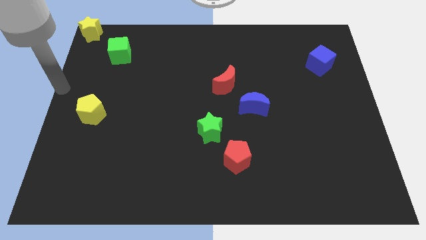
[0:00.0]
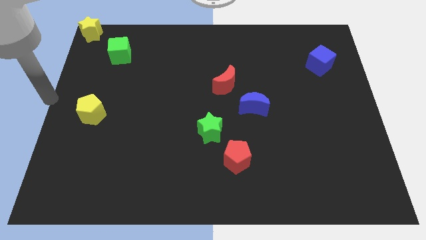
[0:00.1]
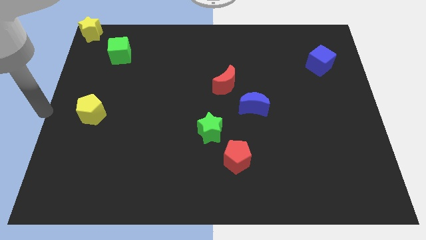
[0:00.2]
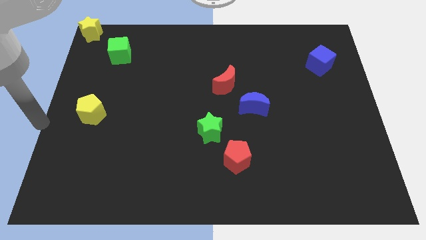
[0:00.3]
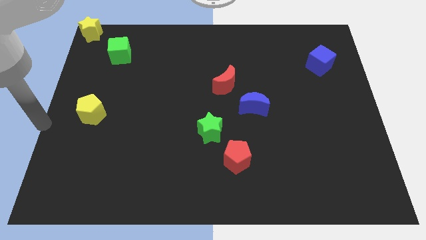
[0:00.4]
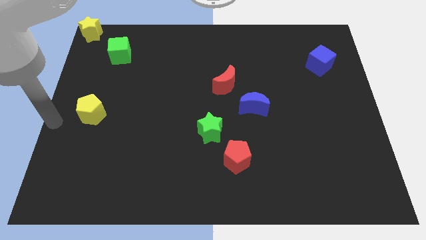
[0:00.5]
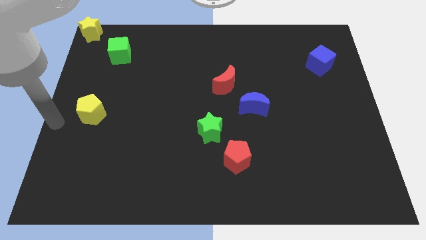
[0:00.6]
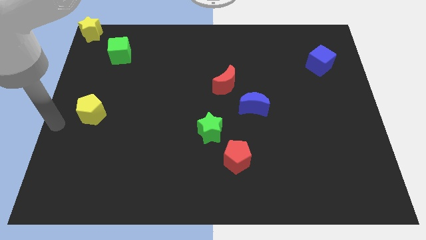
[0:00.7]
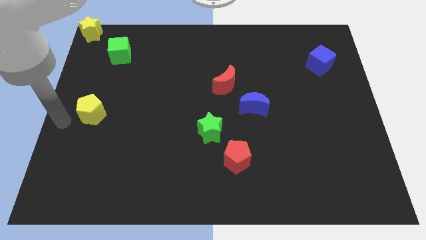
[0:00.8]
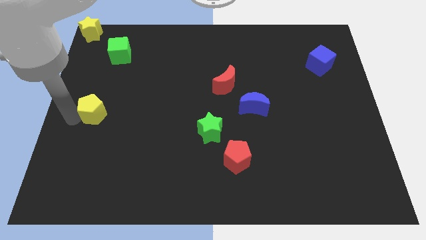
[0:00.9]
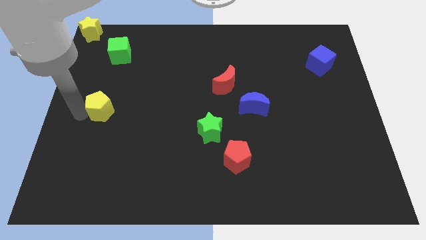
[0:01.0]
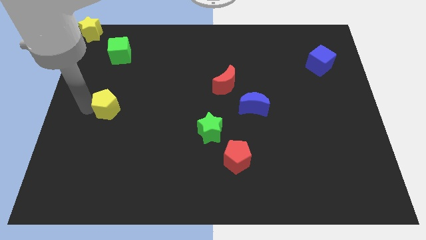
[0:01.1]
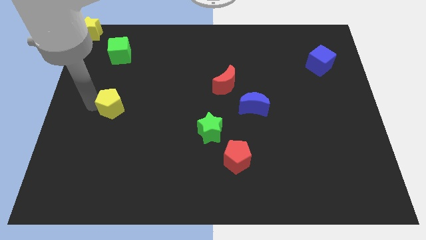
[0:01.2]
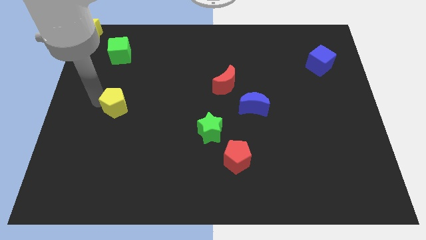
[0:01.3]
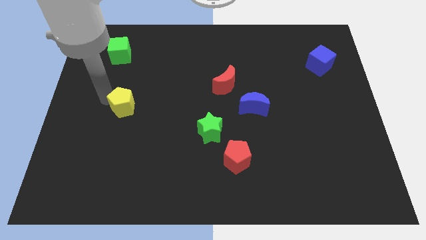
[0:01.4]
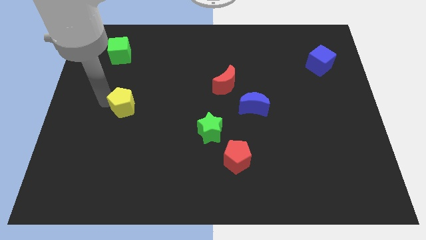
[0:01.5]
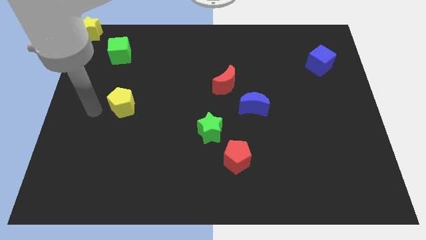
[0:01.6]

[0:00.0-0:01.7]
place yellow pentagon to the bottom of green cube

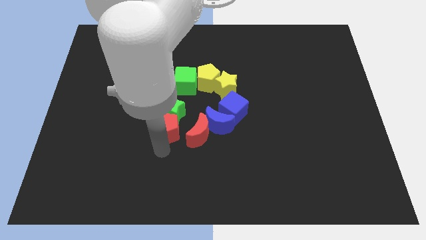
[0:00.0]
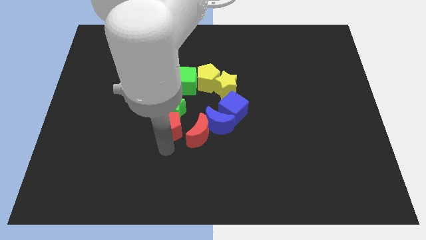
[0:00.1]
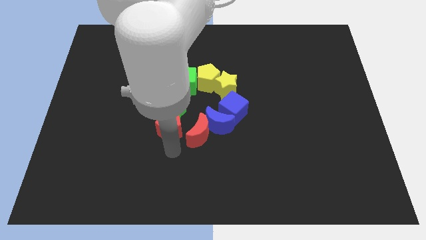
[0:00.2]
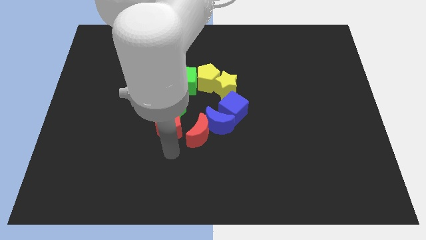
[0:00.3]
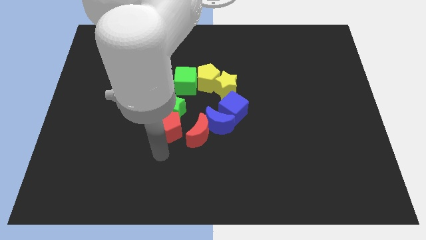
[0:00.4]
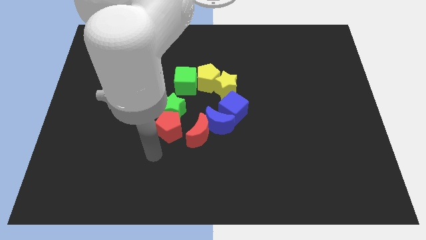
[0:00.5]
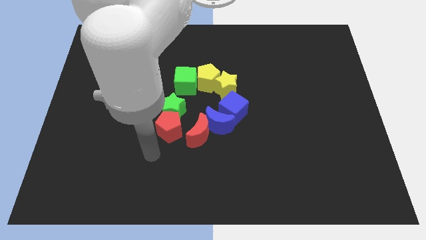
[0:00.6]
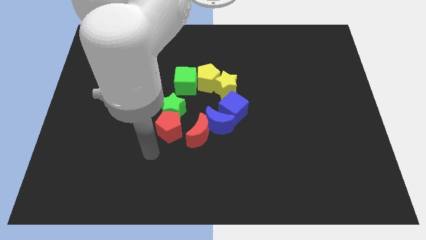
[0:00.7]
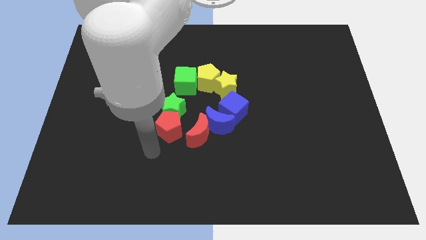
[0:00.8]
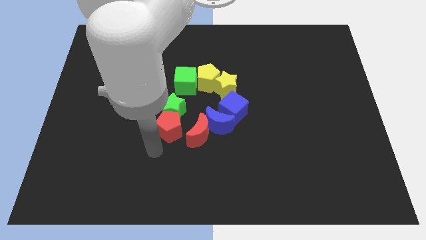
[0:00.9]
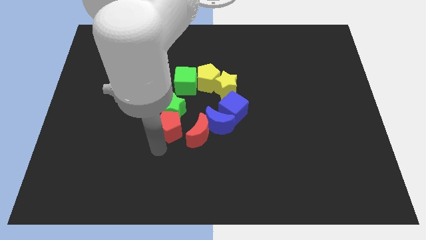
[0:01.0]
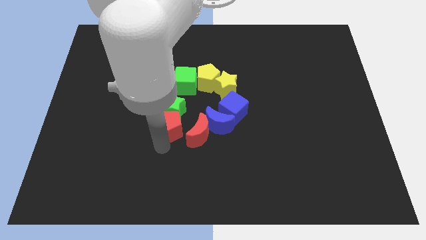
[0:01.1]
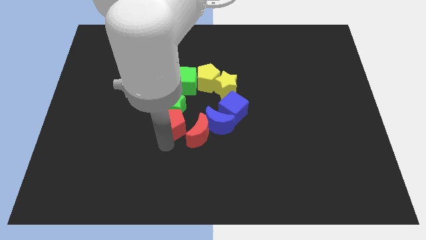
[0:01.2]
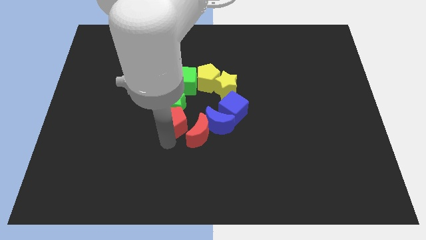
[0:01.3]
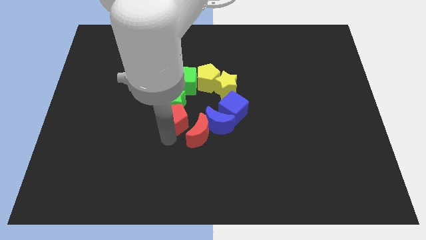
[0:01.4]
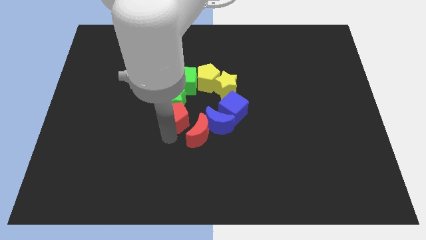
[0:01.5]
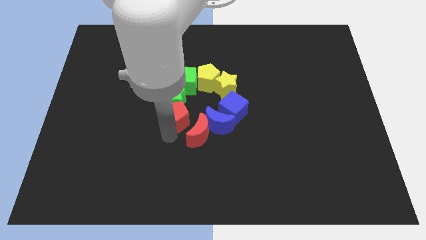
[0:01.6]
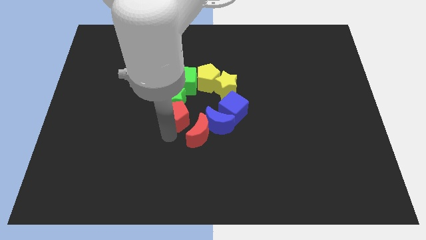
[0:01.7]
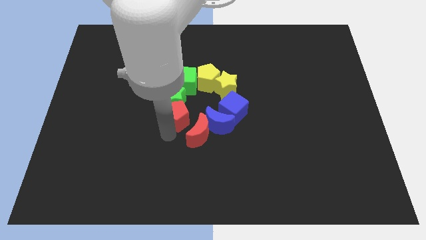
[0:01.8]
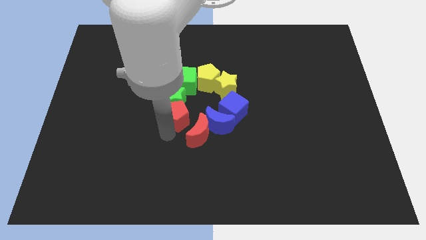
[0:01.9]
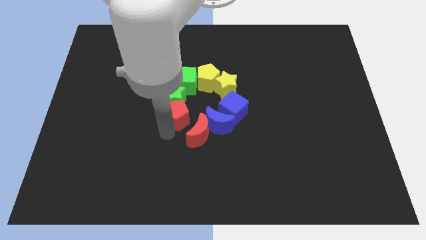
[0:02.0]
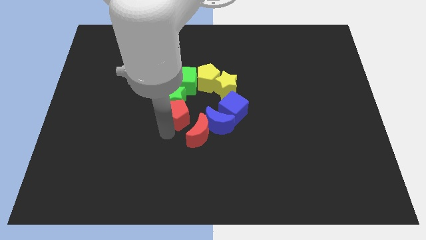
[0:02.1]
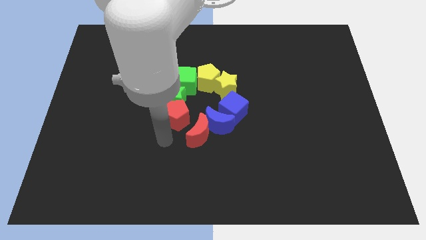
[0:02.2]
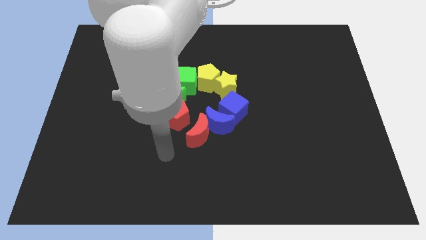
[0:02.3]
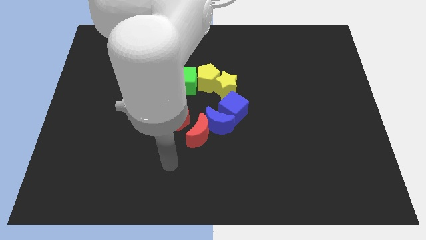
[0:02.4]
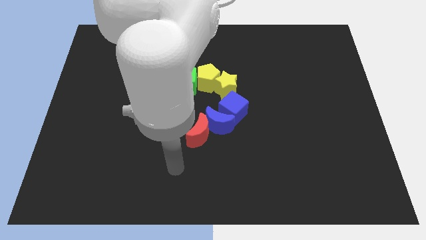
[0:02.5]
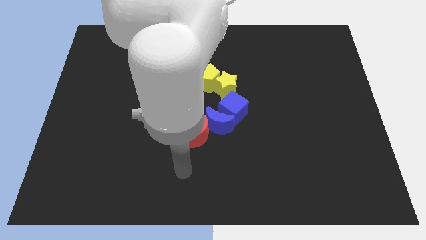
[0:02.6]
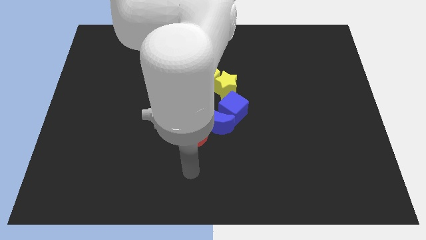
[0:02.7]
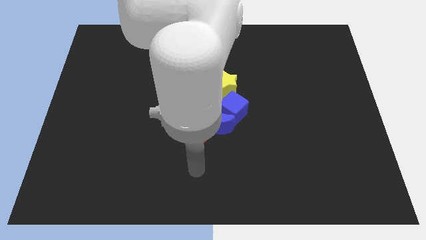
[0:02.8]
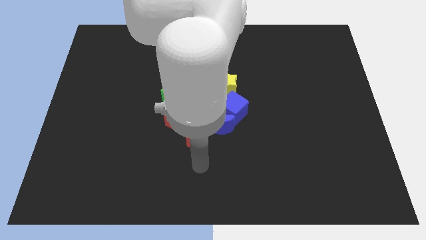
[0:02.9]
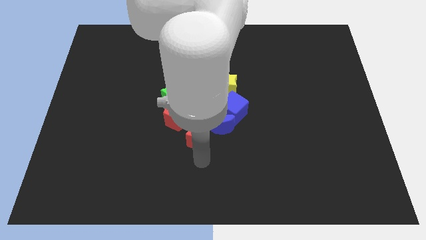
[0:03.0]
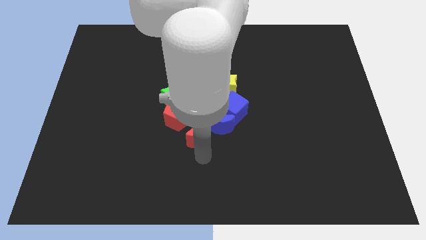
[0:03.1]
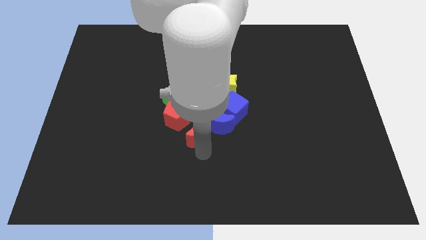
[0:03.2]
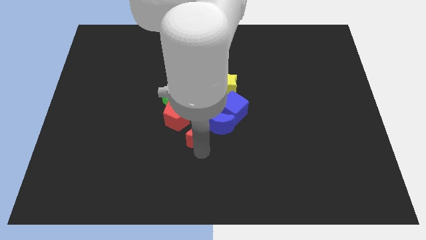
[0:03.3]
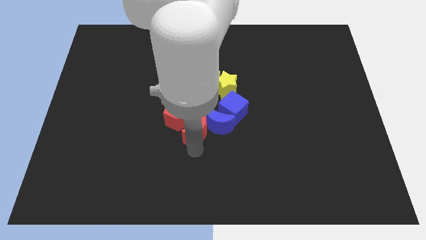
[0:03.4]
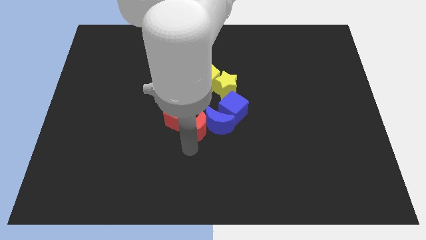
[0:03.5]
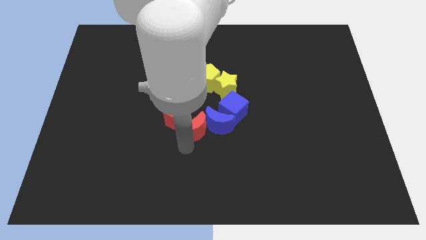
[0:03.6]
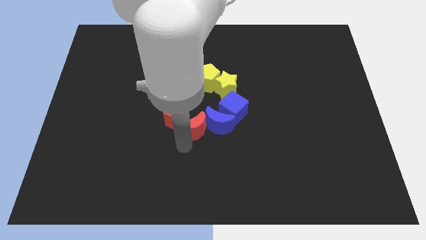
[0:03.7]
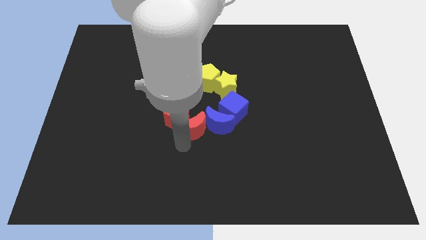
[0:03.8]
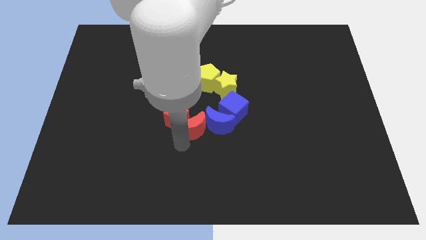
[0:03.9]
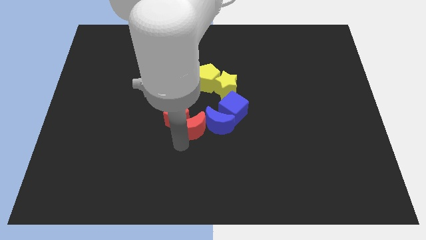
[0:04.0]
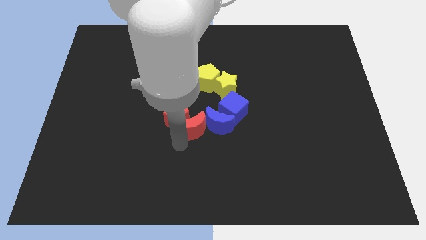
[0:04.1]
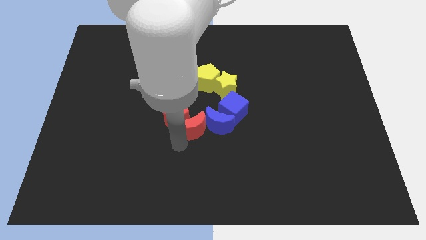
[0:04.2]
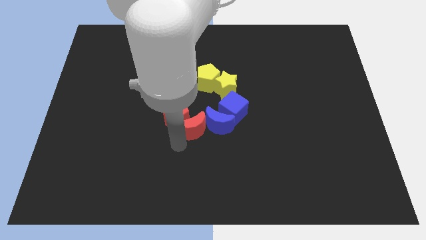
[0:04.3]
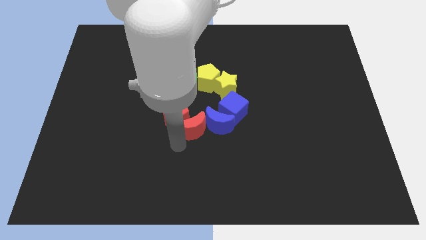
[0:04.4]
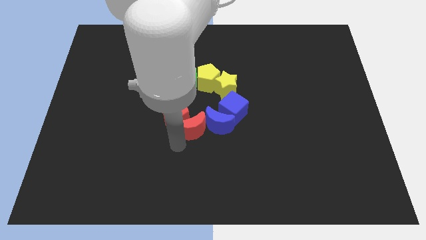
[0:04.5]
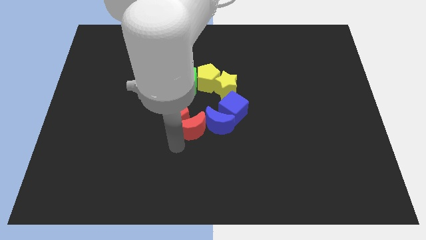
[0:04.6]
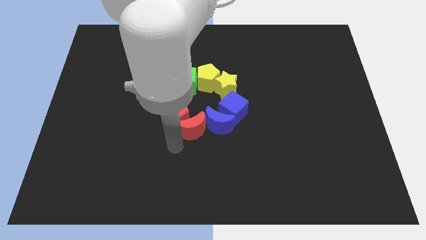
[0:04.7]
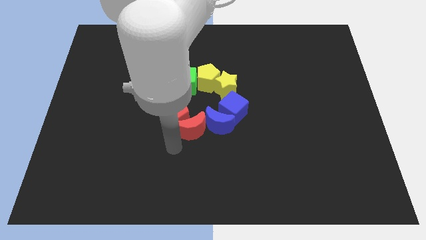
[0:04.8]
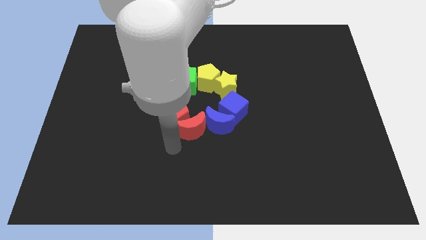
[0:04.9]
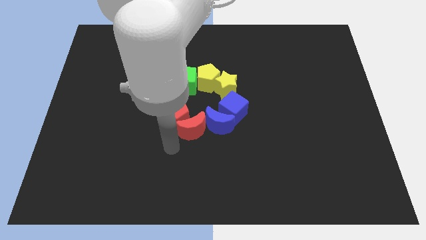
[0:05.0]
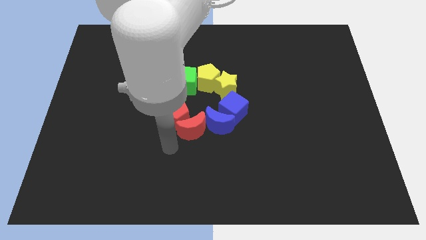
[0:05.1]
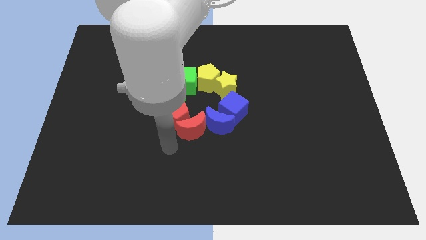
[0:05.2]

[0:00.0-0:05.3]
tap the red moon slightly to the top

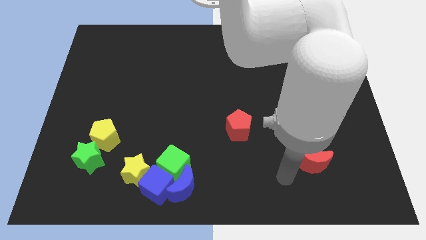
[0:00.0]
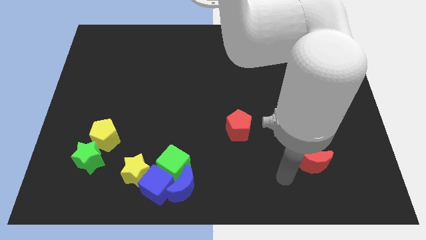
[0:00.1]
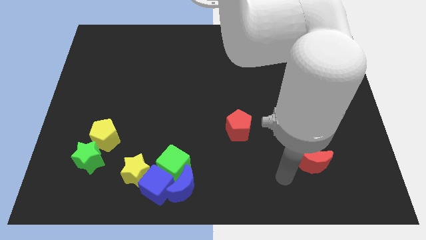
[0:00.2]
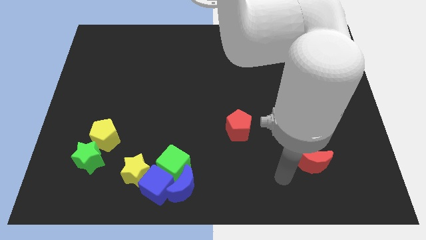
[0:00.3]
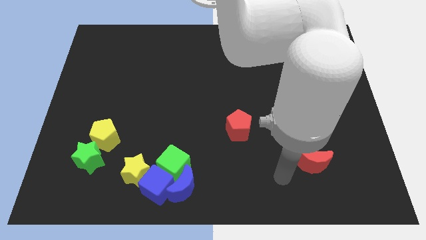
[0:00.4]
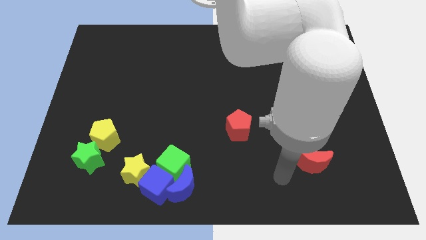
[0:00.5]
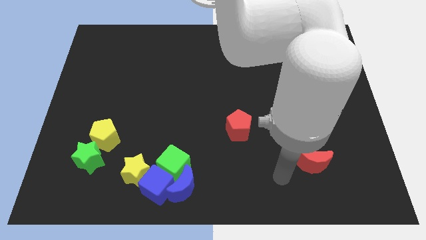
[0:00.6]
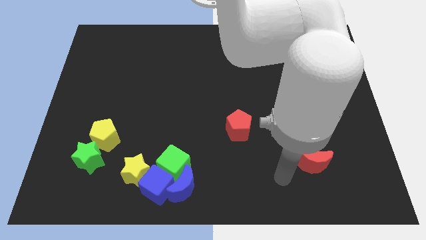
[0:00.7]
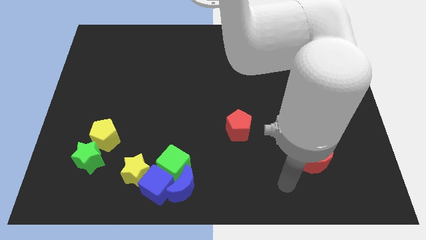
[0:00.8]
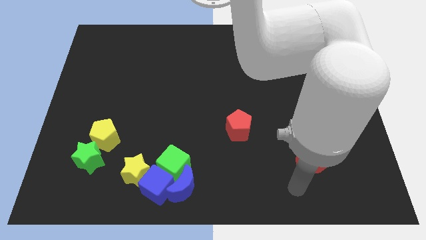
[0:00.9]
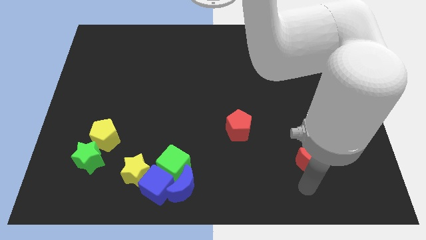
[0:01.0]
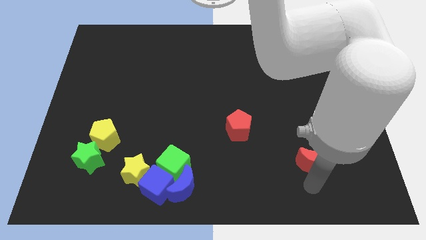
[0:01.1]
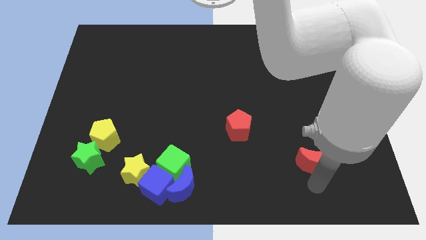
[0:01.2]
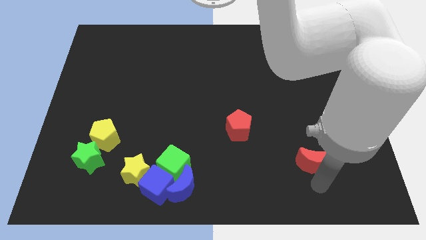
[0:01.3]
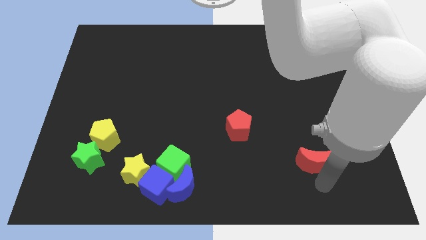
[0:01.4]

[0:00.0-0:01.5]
move your arm to the bottom of the re crescent

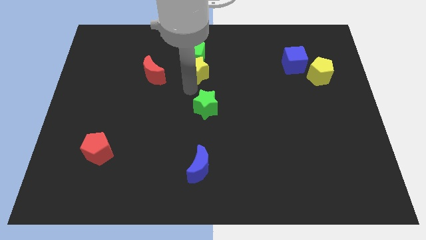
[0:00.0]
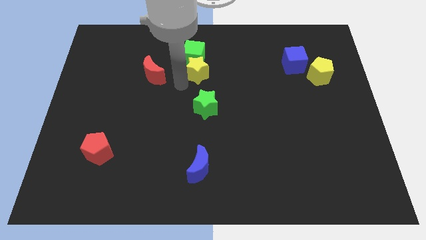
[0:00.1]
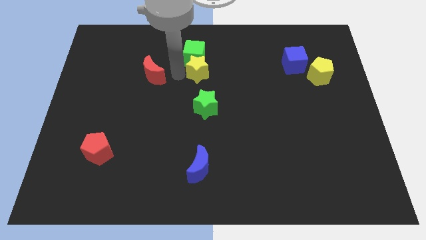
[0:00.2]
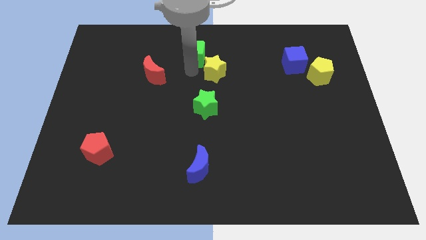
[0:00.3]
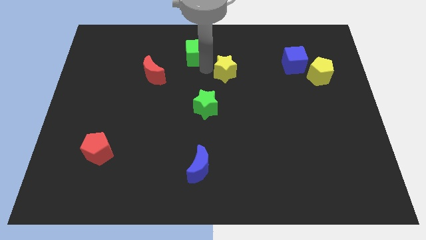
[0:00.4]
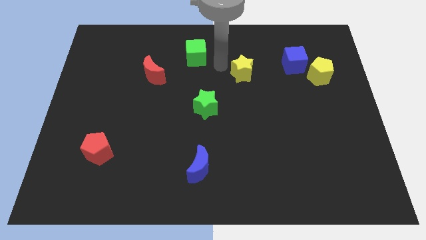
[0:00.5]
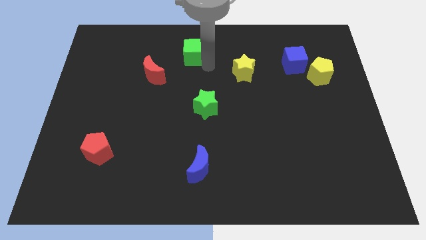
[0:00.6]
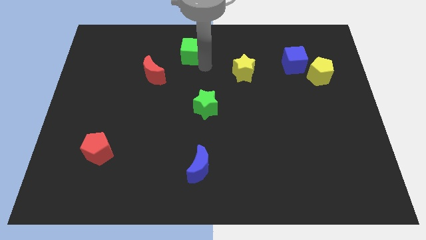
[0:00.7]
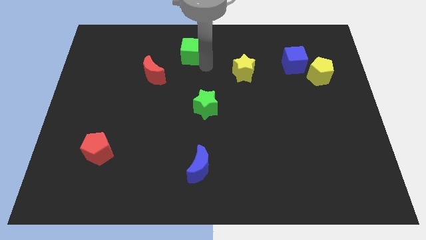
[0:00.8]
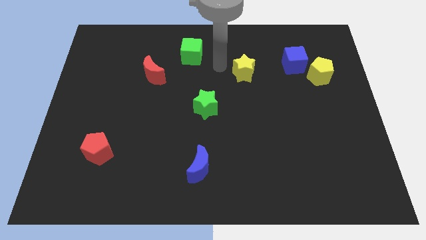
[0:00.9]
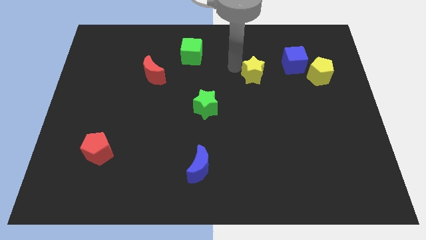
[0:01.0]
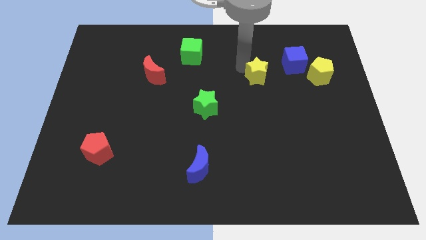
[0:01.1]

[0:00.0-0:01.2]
separate yellow star from green cube
